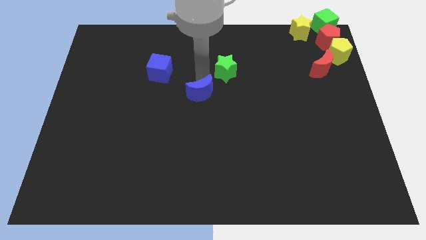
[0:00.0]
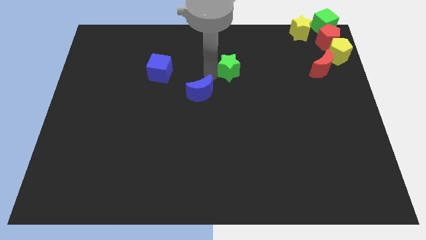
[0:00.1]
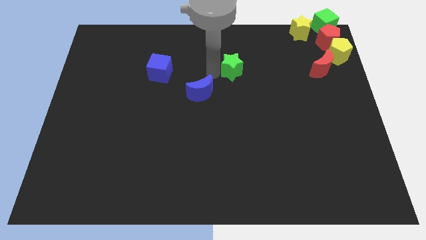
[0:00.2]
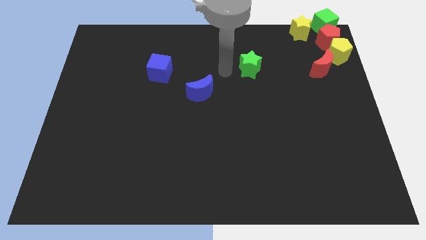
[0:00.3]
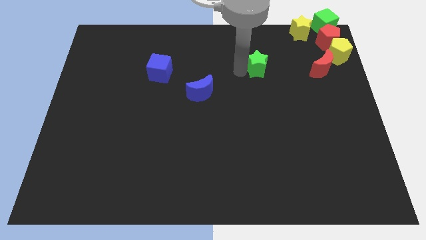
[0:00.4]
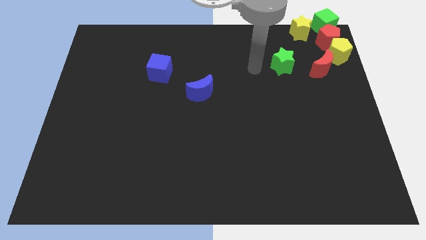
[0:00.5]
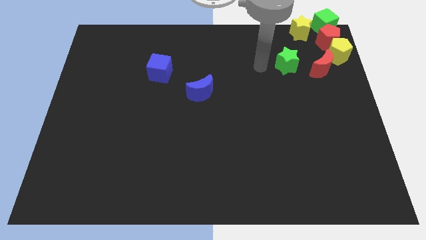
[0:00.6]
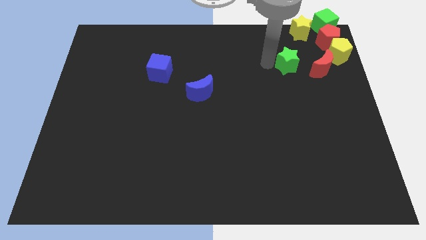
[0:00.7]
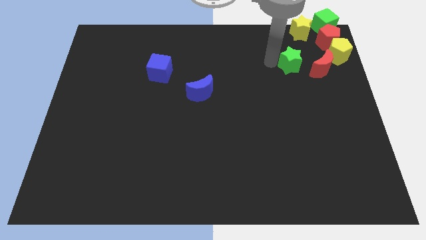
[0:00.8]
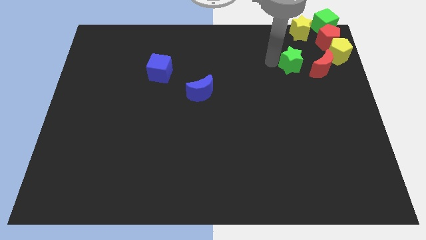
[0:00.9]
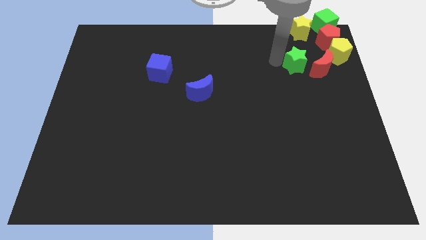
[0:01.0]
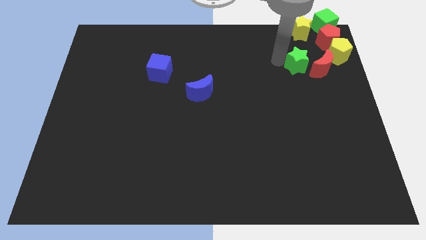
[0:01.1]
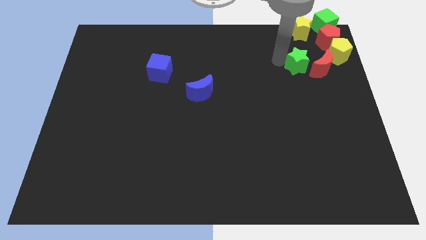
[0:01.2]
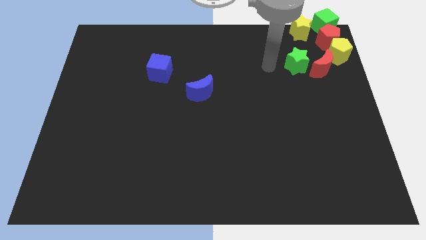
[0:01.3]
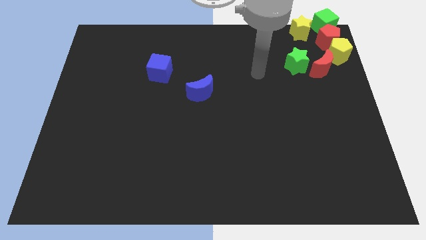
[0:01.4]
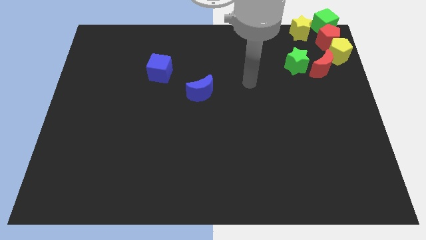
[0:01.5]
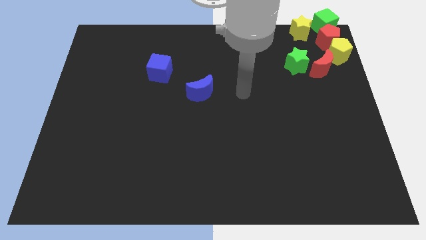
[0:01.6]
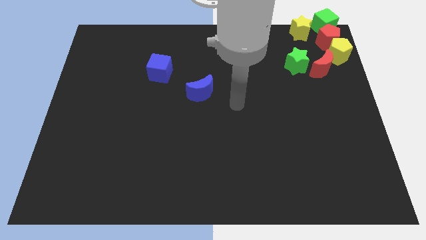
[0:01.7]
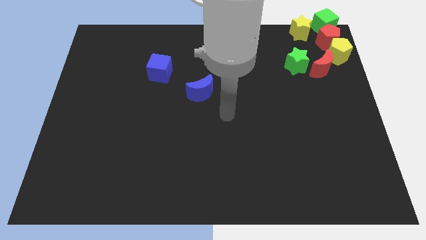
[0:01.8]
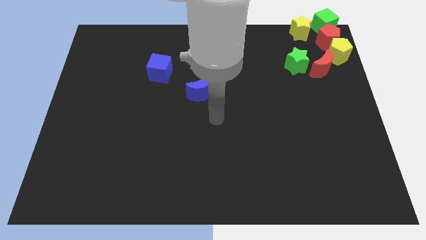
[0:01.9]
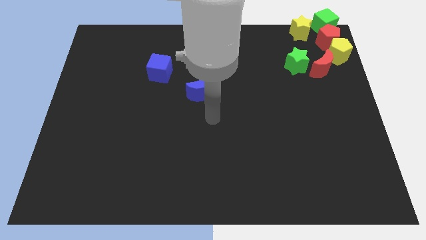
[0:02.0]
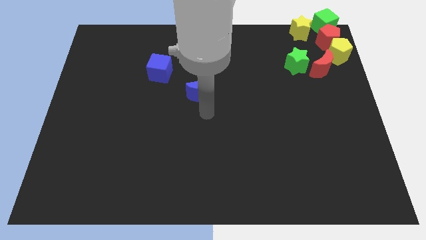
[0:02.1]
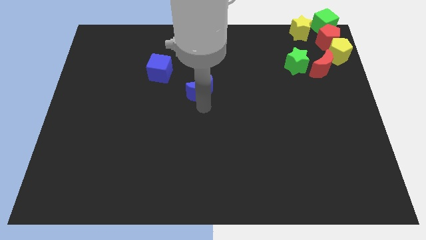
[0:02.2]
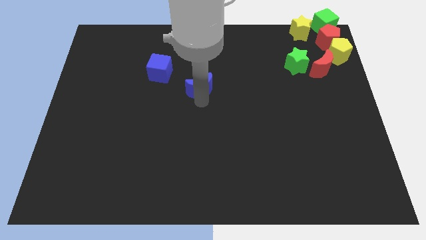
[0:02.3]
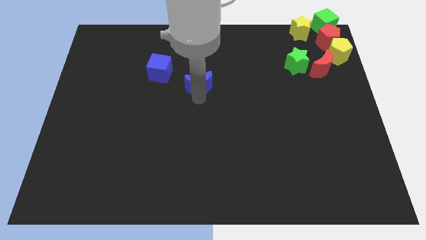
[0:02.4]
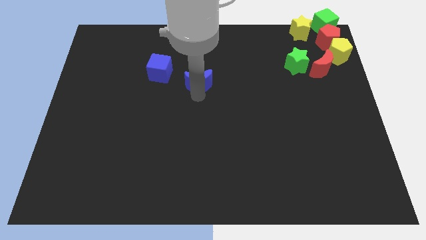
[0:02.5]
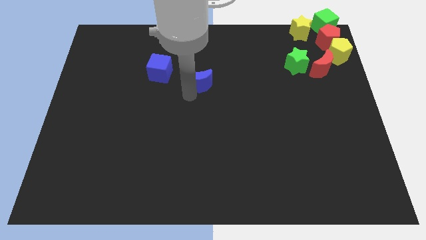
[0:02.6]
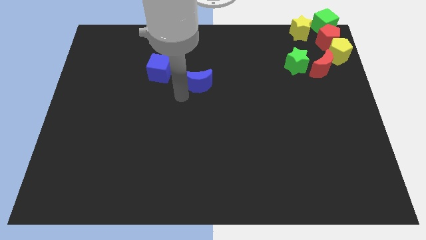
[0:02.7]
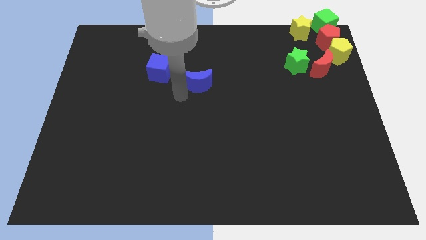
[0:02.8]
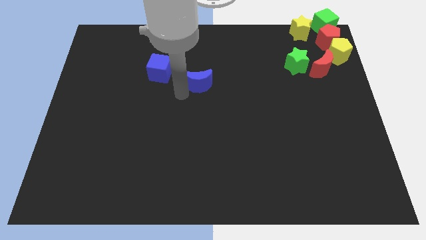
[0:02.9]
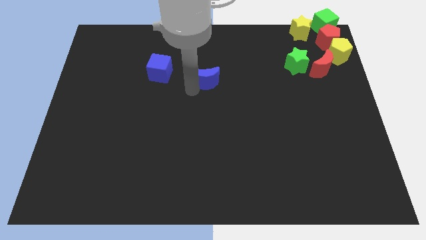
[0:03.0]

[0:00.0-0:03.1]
separate green star and blue crescent from each other

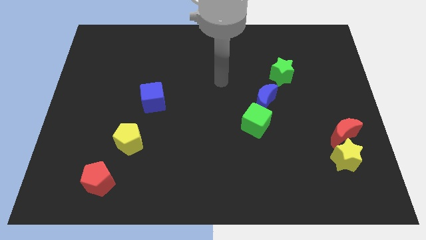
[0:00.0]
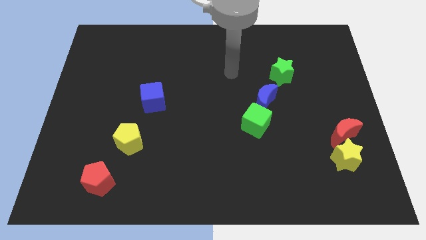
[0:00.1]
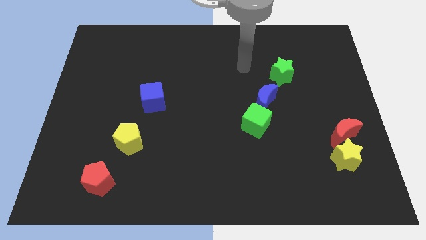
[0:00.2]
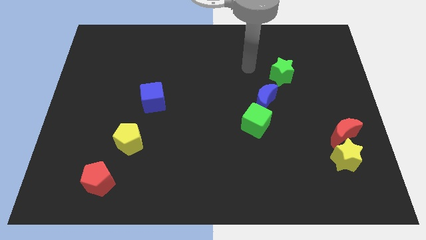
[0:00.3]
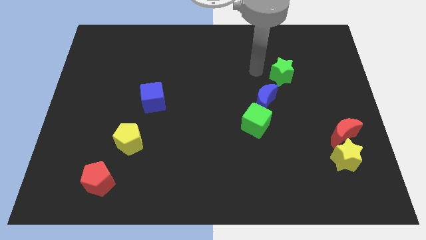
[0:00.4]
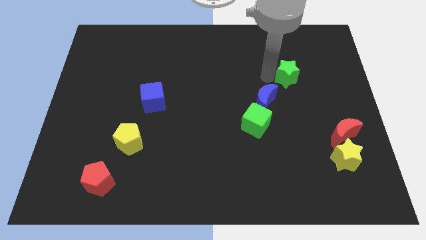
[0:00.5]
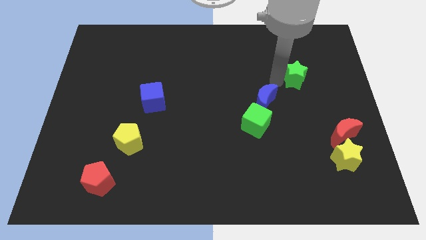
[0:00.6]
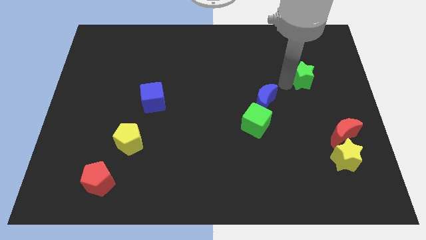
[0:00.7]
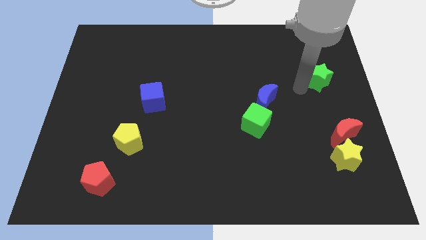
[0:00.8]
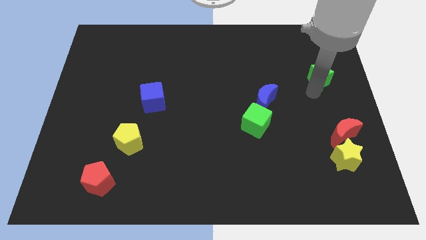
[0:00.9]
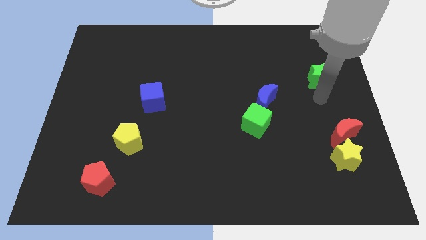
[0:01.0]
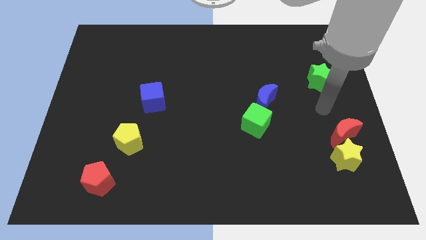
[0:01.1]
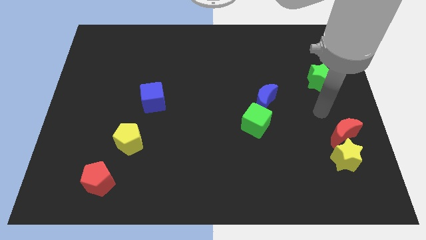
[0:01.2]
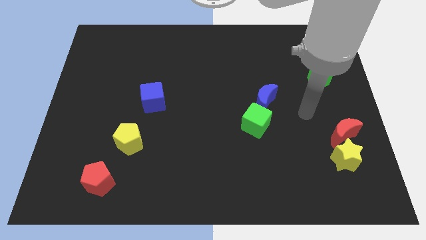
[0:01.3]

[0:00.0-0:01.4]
place the green star above the red crescent

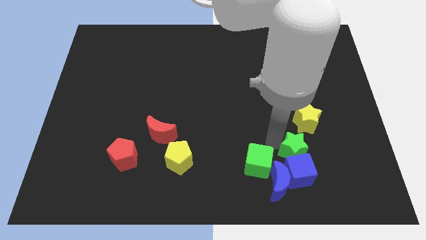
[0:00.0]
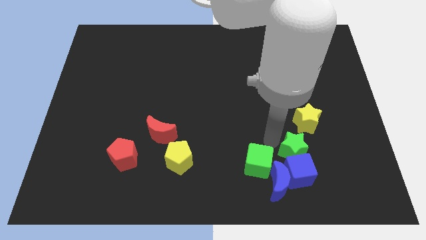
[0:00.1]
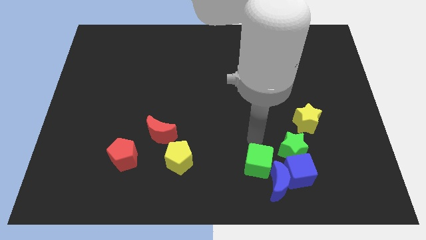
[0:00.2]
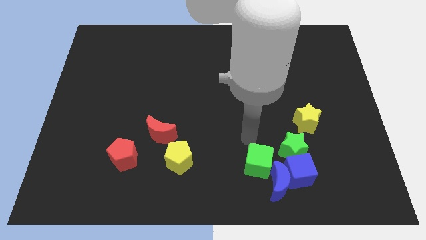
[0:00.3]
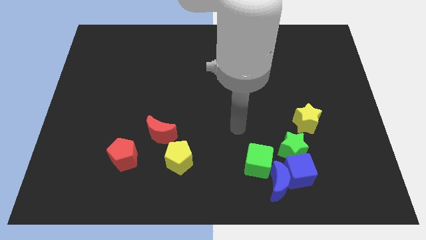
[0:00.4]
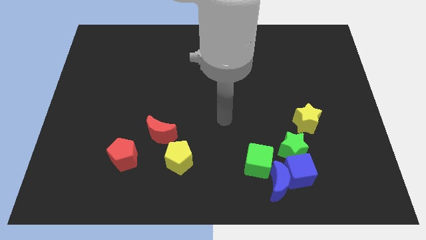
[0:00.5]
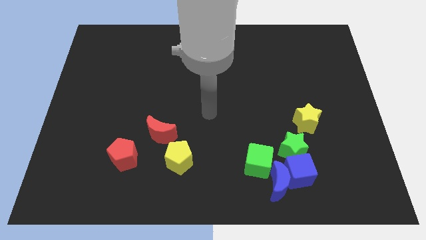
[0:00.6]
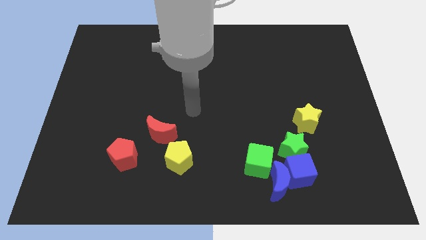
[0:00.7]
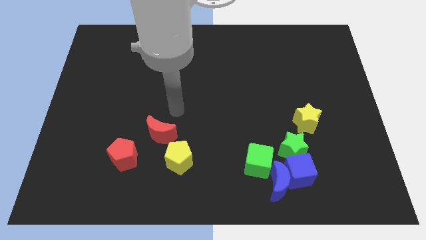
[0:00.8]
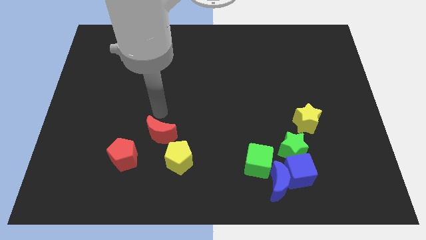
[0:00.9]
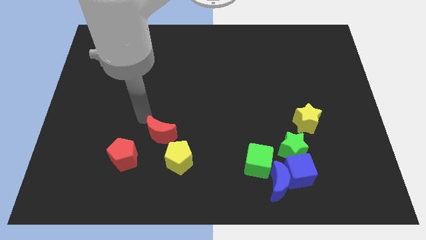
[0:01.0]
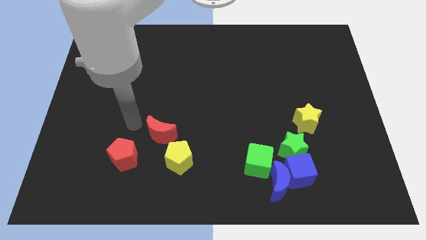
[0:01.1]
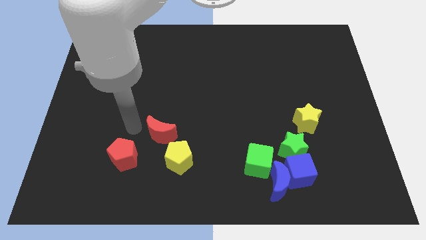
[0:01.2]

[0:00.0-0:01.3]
point your arm at the left of the red crescent

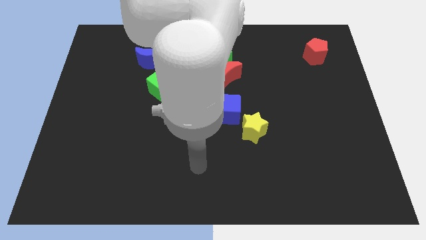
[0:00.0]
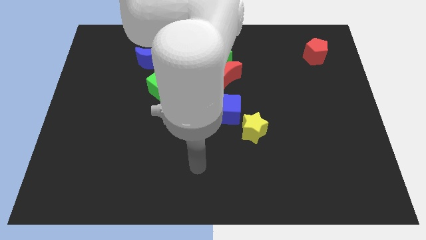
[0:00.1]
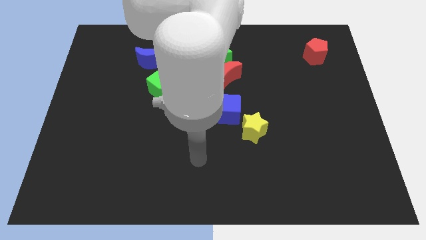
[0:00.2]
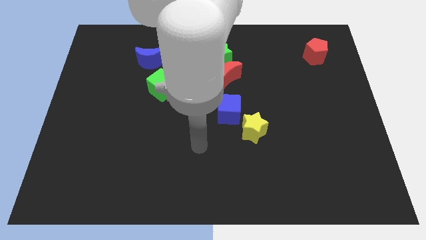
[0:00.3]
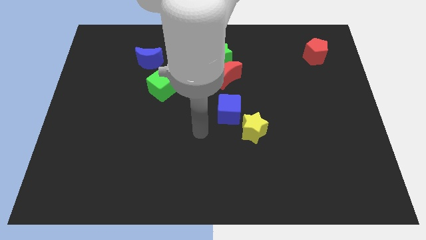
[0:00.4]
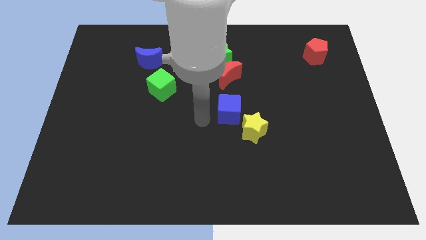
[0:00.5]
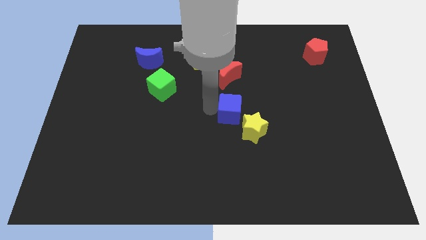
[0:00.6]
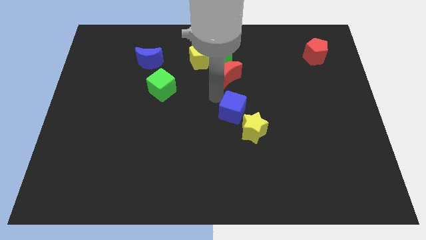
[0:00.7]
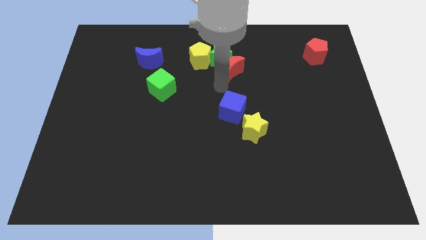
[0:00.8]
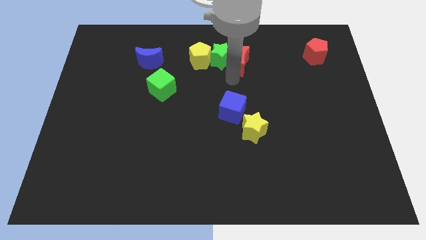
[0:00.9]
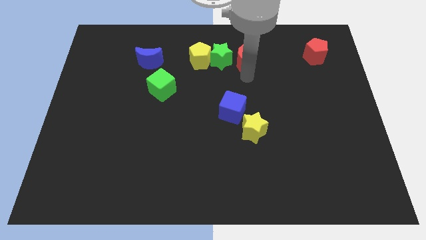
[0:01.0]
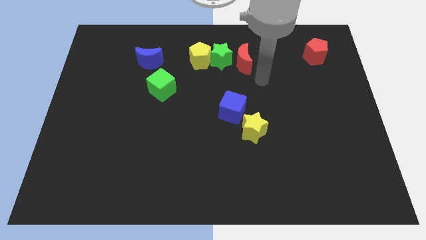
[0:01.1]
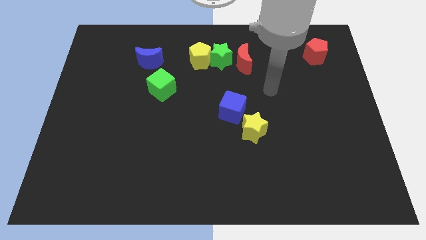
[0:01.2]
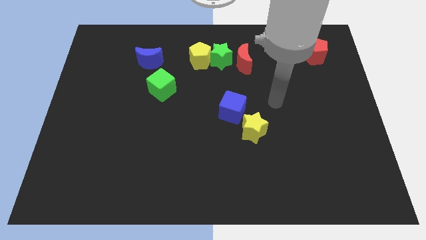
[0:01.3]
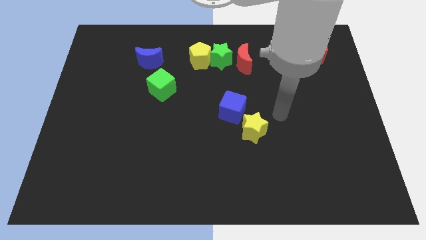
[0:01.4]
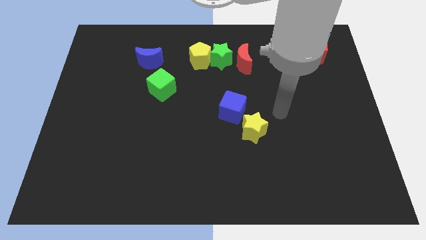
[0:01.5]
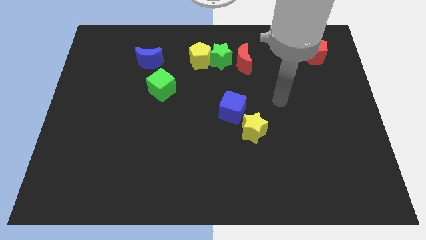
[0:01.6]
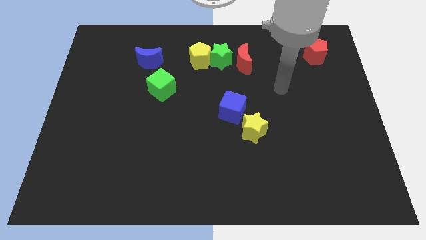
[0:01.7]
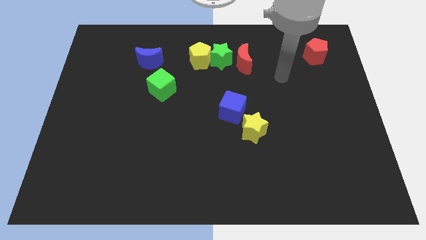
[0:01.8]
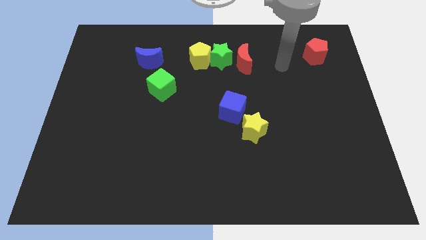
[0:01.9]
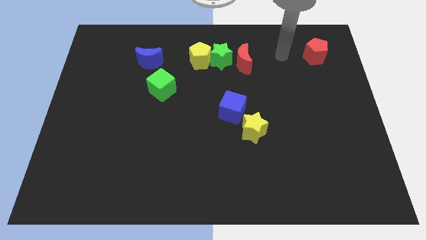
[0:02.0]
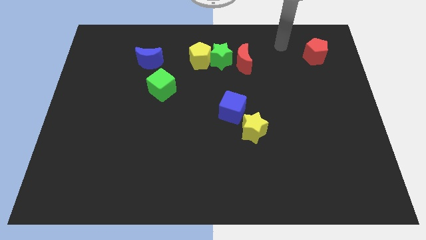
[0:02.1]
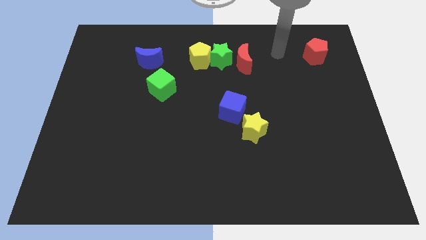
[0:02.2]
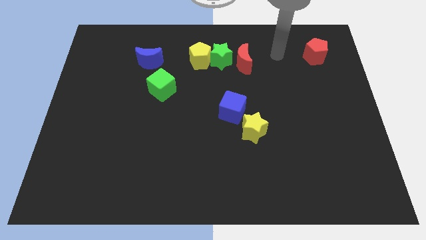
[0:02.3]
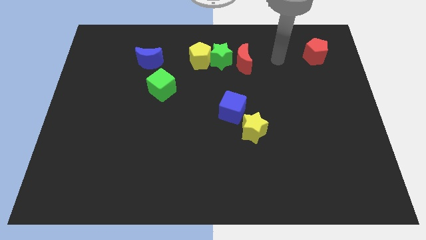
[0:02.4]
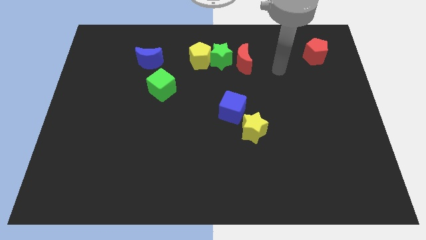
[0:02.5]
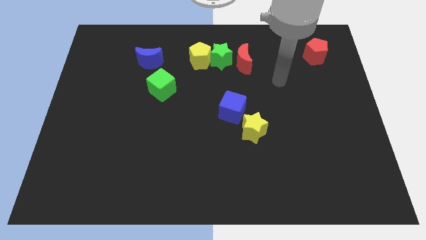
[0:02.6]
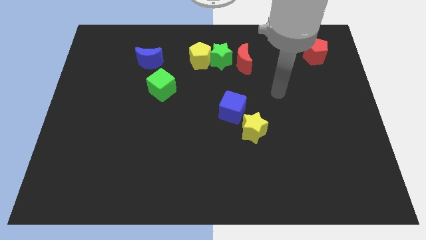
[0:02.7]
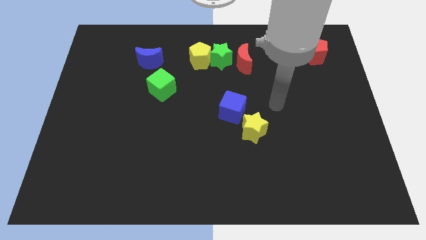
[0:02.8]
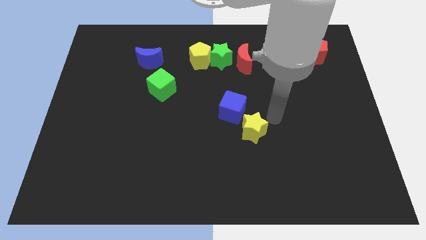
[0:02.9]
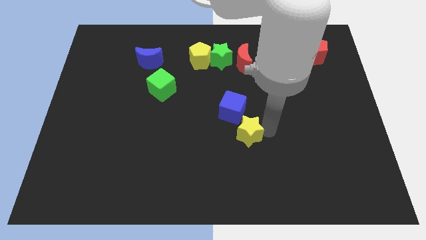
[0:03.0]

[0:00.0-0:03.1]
place the red moon in between the green star and red pentagon
